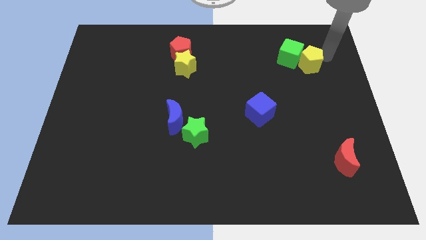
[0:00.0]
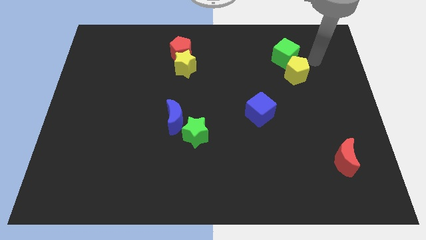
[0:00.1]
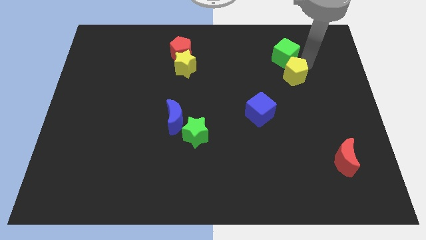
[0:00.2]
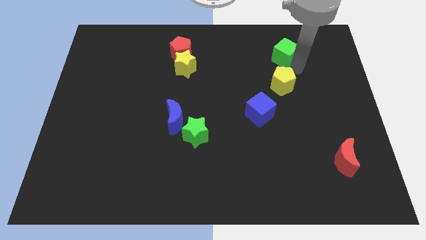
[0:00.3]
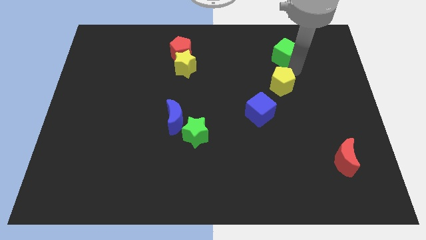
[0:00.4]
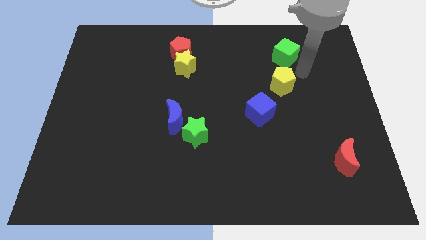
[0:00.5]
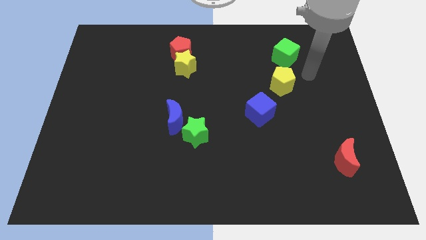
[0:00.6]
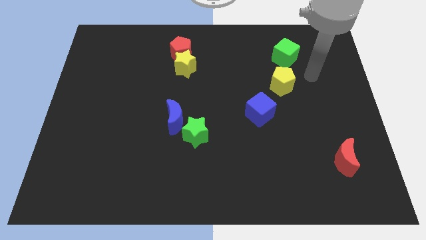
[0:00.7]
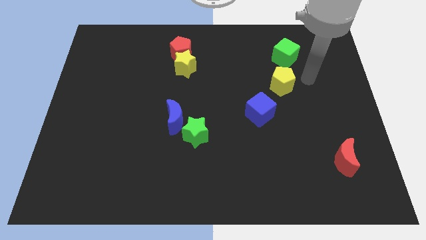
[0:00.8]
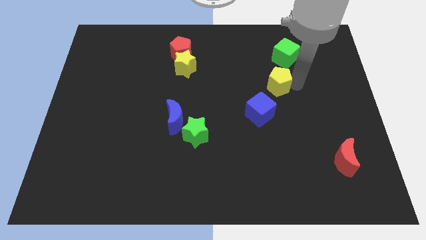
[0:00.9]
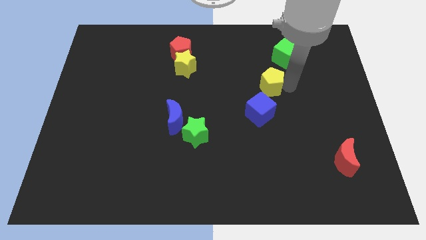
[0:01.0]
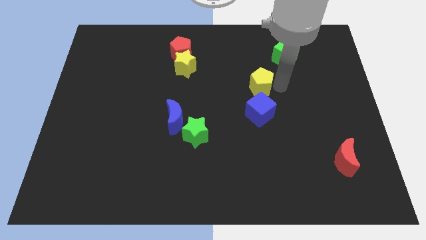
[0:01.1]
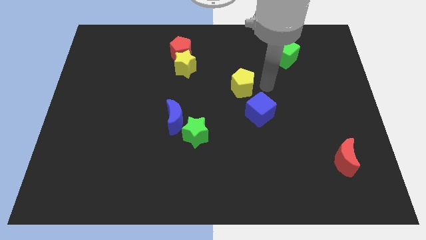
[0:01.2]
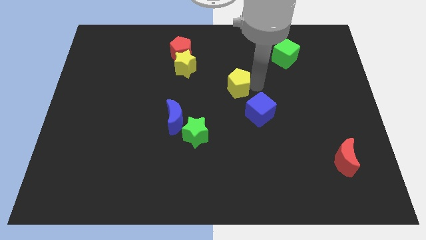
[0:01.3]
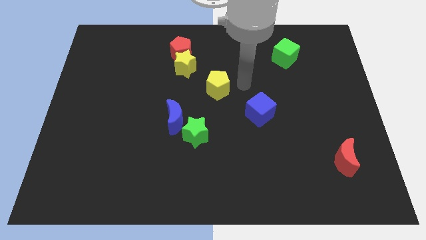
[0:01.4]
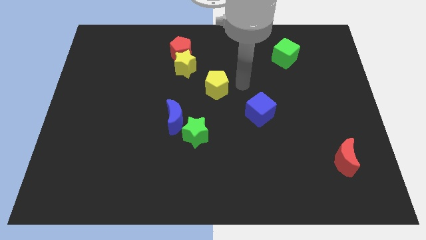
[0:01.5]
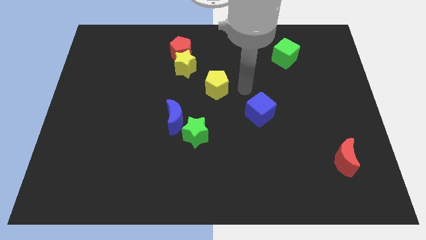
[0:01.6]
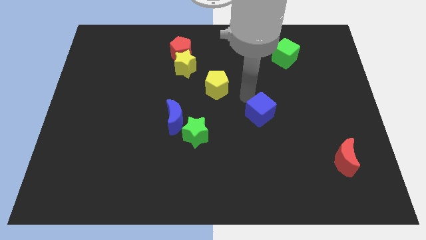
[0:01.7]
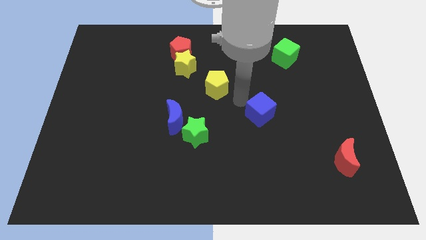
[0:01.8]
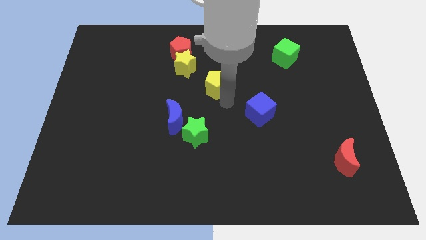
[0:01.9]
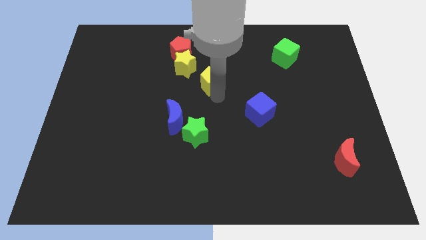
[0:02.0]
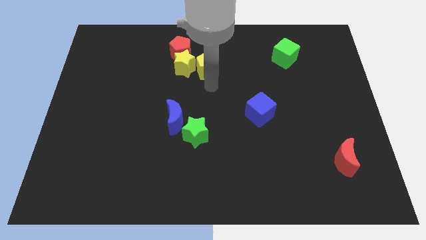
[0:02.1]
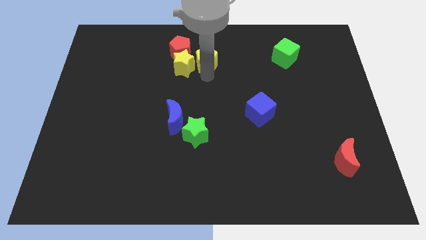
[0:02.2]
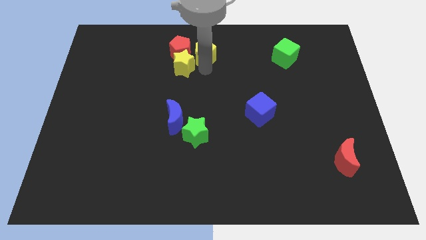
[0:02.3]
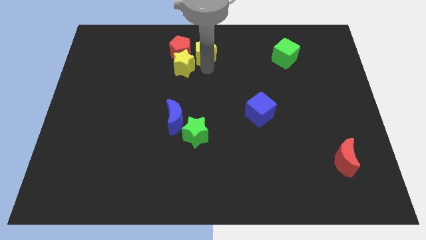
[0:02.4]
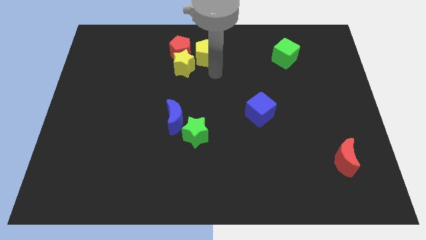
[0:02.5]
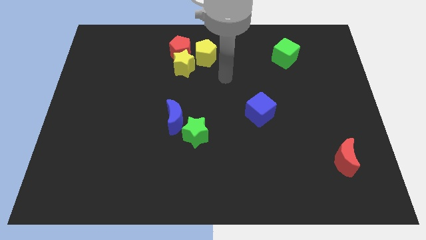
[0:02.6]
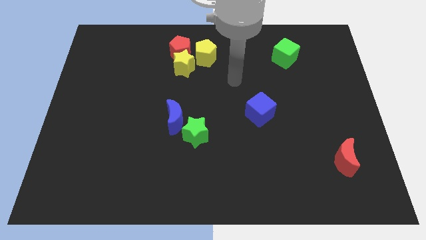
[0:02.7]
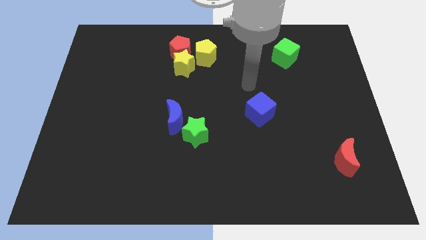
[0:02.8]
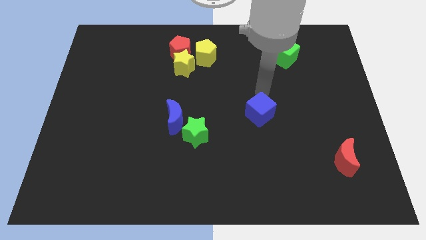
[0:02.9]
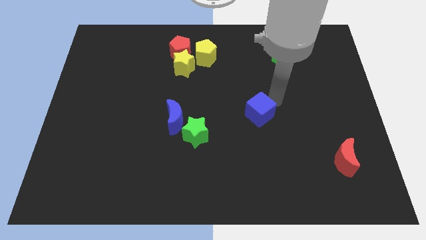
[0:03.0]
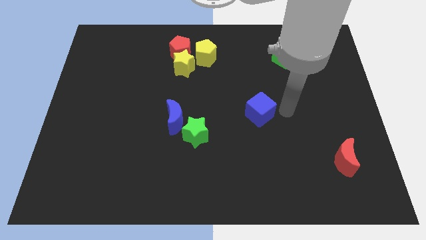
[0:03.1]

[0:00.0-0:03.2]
put the yellow pentagon diagonally top right to the yellow star

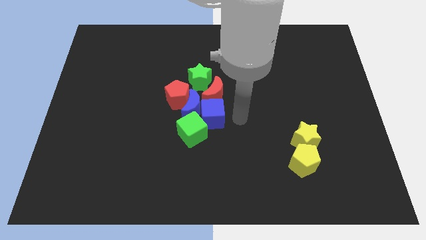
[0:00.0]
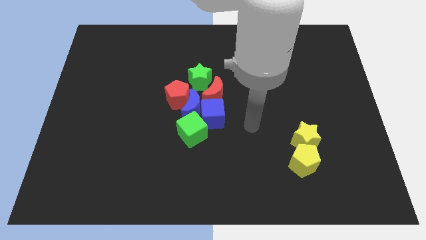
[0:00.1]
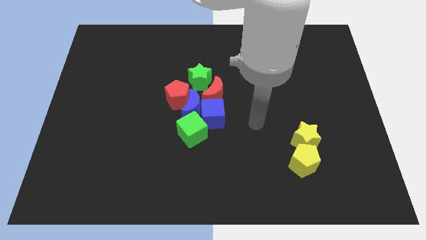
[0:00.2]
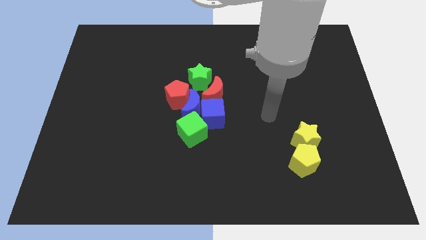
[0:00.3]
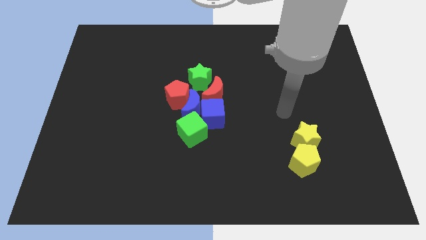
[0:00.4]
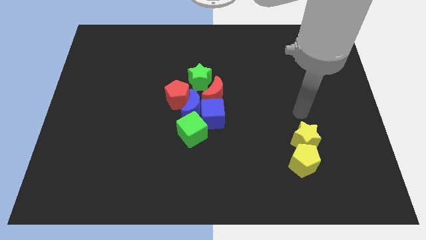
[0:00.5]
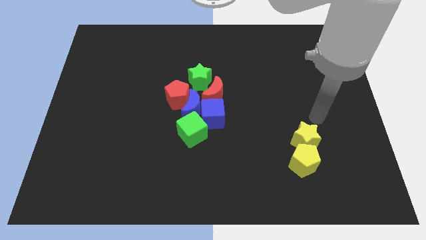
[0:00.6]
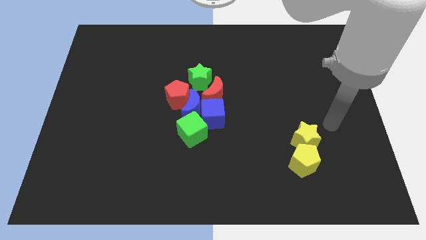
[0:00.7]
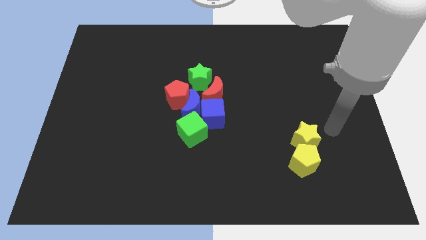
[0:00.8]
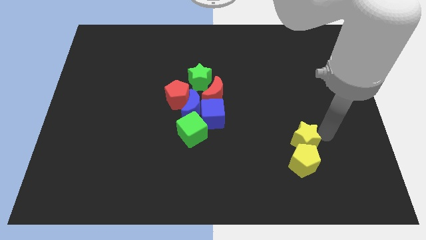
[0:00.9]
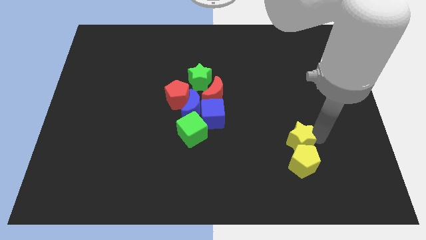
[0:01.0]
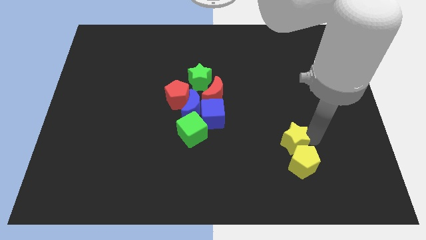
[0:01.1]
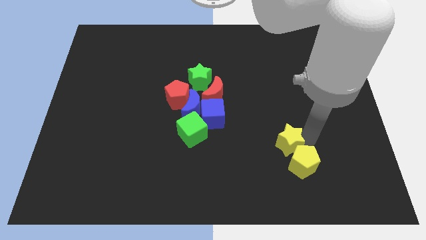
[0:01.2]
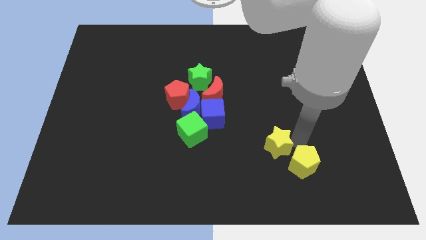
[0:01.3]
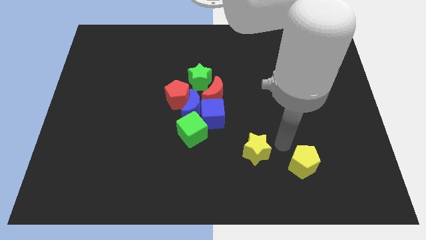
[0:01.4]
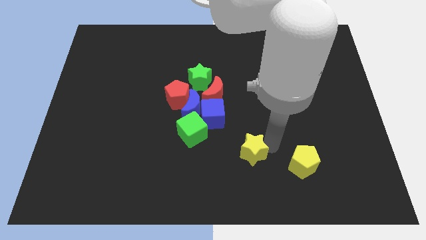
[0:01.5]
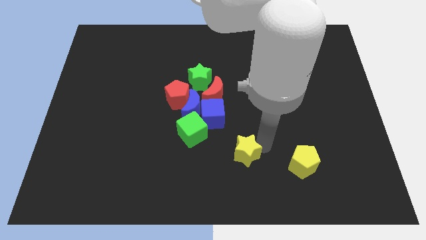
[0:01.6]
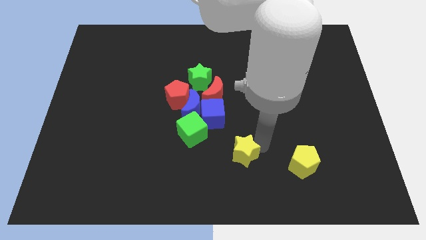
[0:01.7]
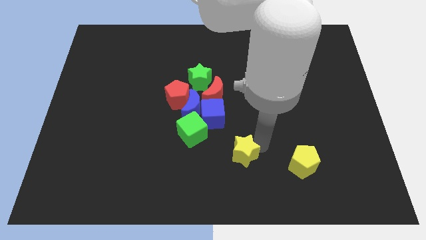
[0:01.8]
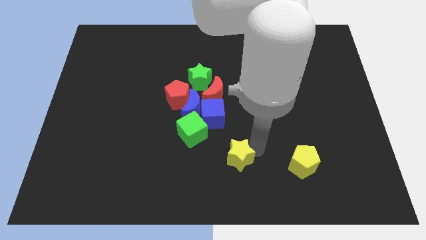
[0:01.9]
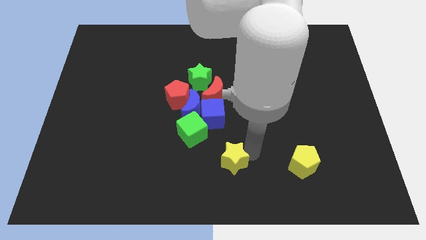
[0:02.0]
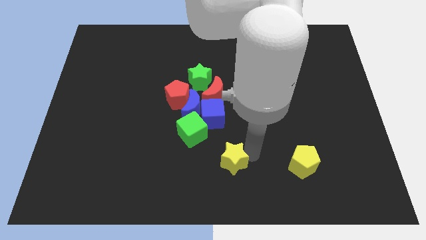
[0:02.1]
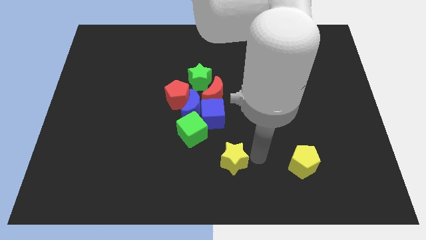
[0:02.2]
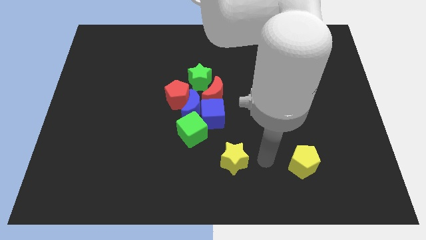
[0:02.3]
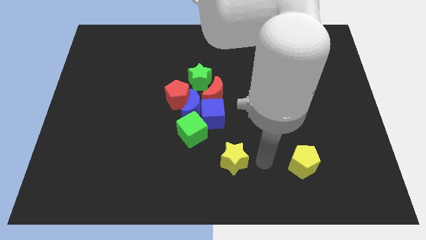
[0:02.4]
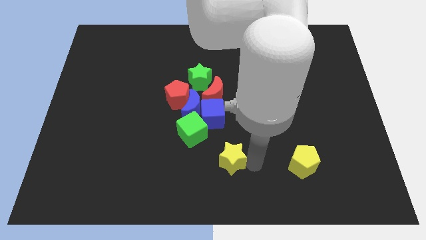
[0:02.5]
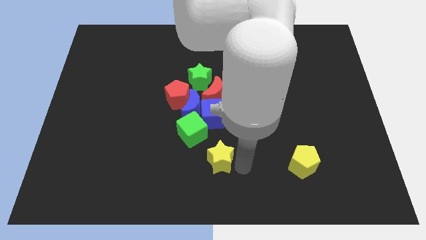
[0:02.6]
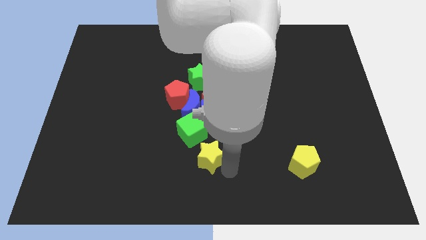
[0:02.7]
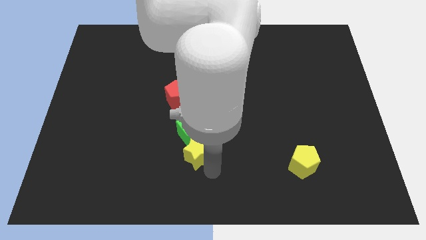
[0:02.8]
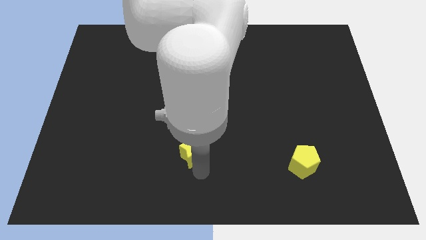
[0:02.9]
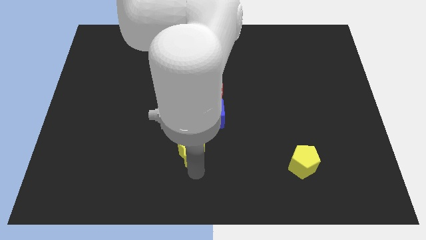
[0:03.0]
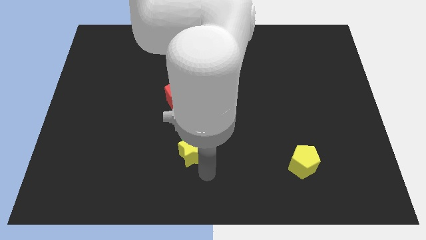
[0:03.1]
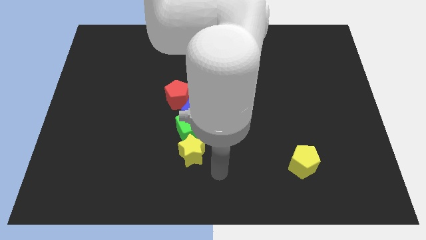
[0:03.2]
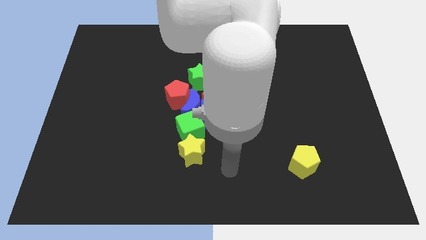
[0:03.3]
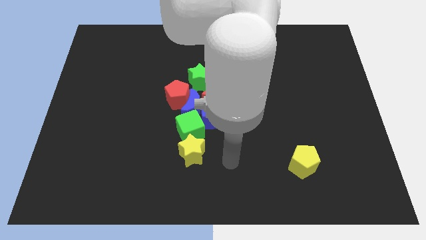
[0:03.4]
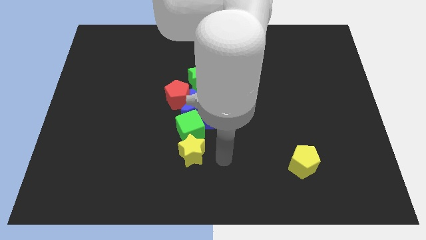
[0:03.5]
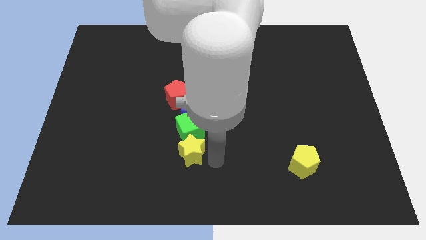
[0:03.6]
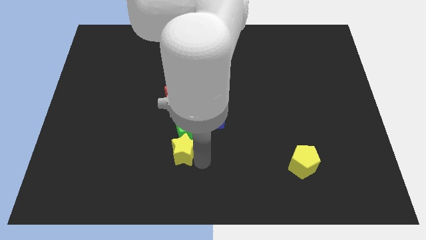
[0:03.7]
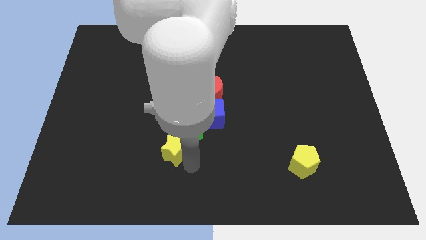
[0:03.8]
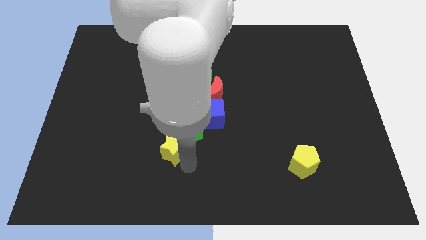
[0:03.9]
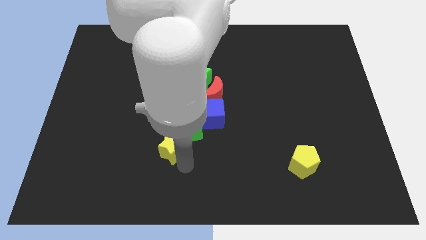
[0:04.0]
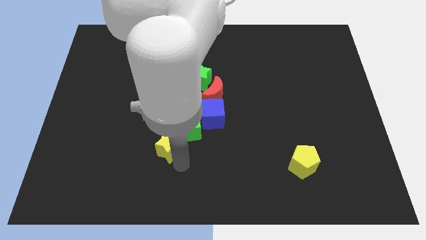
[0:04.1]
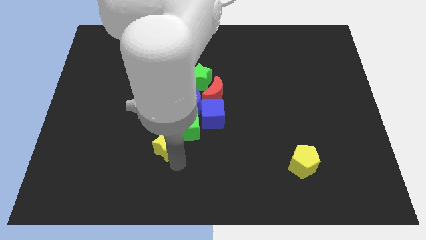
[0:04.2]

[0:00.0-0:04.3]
place the yellow star below the green cube

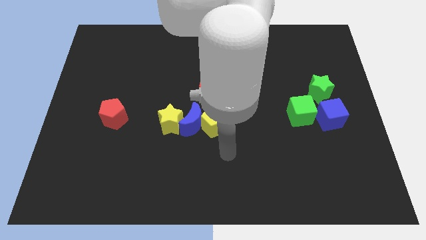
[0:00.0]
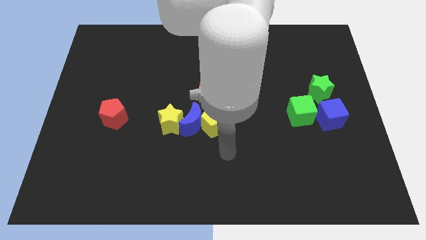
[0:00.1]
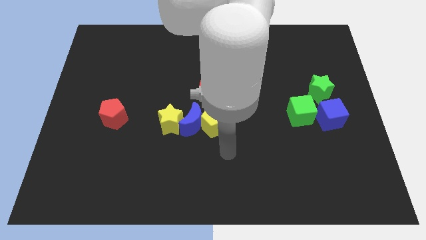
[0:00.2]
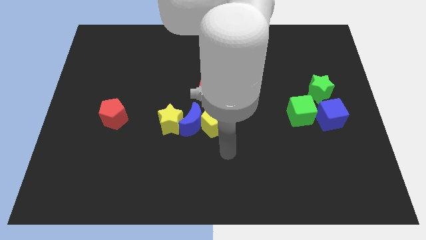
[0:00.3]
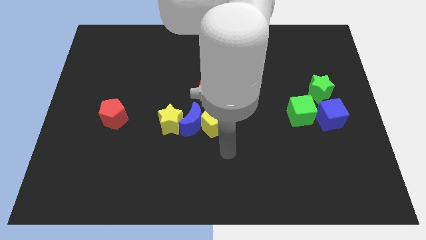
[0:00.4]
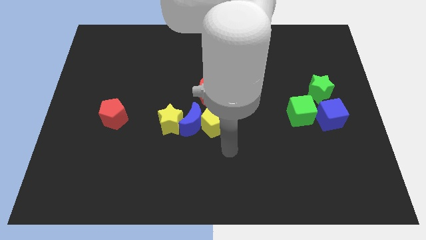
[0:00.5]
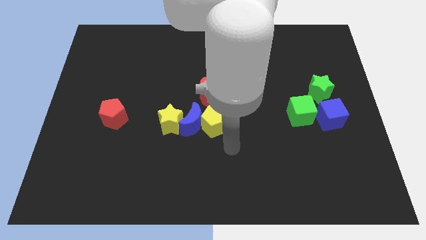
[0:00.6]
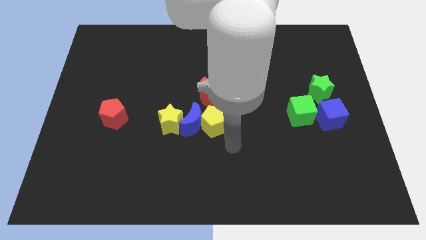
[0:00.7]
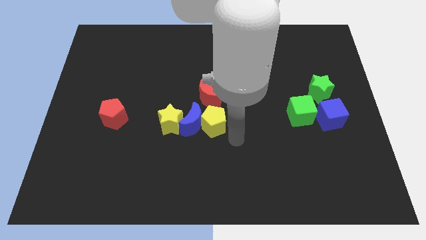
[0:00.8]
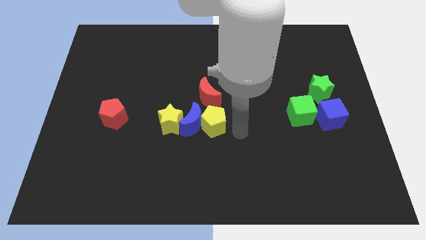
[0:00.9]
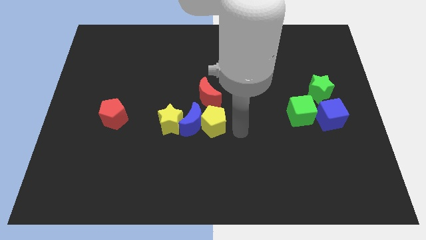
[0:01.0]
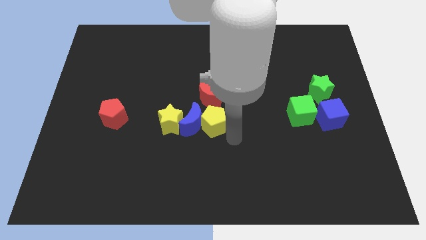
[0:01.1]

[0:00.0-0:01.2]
move the arm to the right side of the yellow pentagon

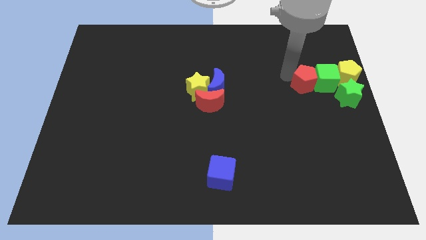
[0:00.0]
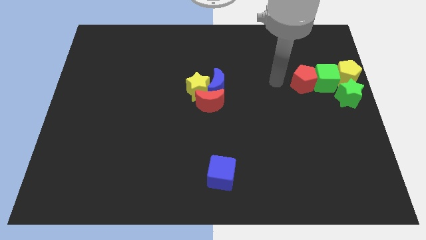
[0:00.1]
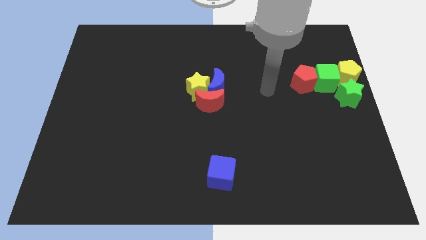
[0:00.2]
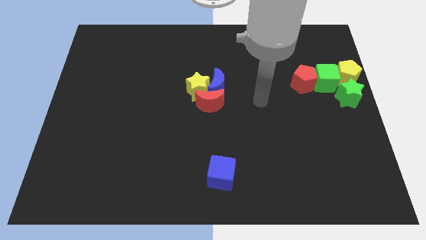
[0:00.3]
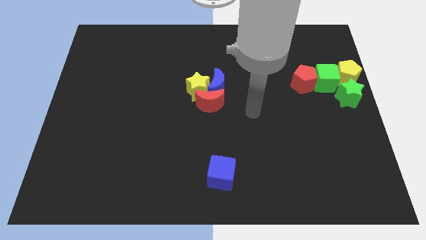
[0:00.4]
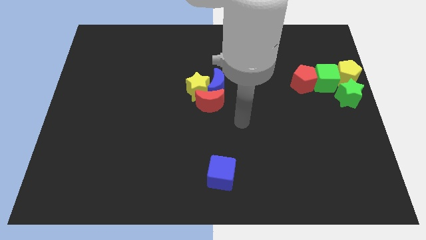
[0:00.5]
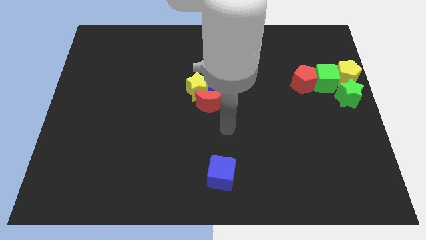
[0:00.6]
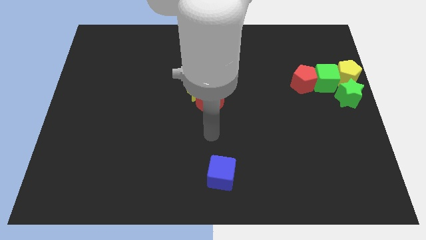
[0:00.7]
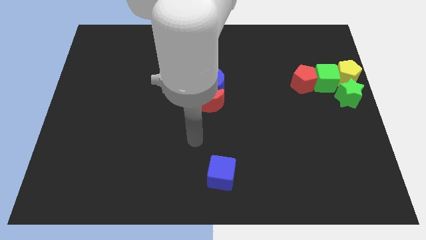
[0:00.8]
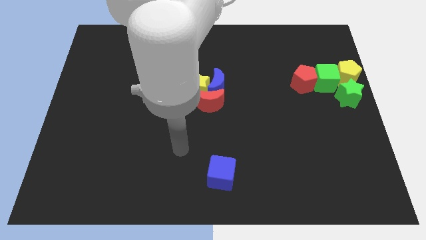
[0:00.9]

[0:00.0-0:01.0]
move your arm away from the red pentagon
